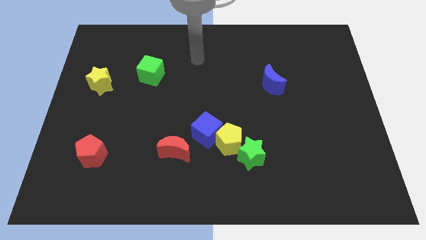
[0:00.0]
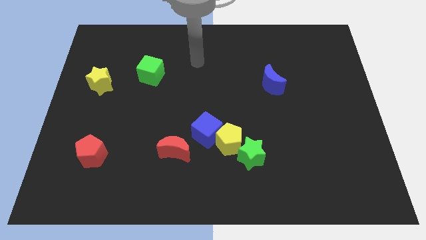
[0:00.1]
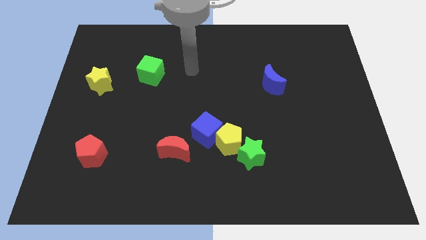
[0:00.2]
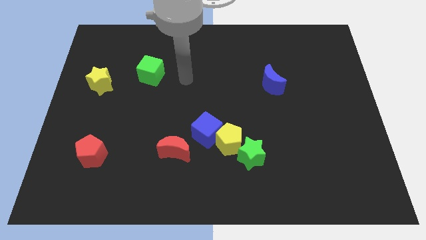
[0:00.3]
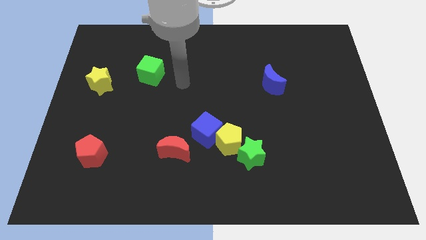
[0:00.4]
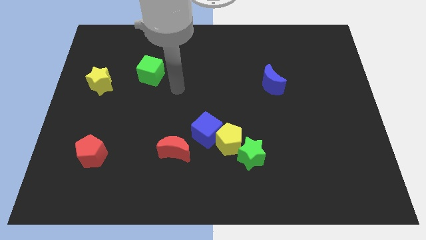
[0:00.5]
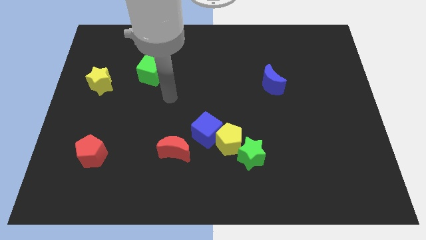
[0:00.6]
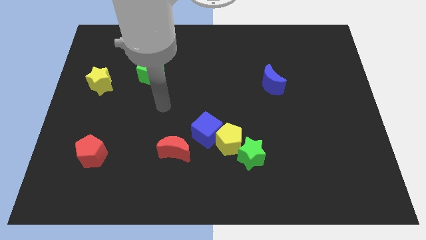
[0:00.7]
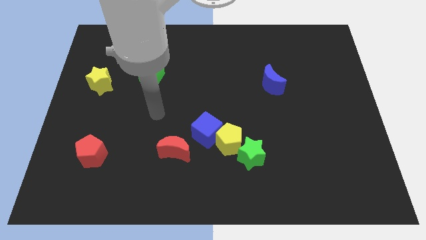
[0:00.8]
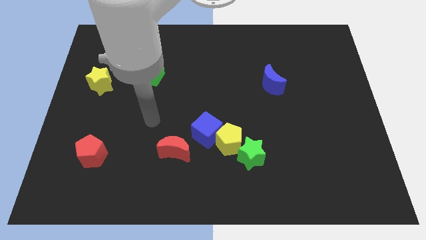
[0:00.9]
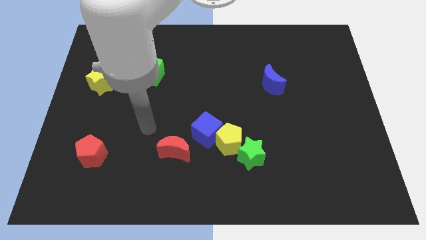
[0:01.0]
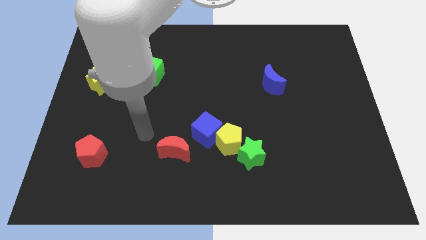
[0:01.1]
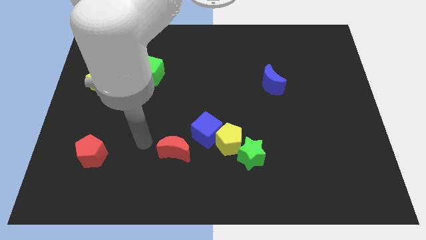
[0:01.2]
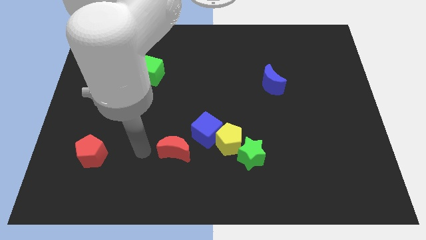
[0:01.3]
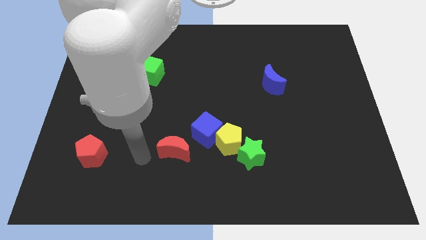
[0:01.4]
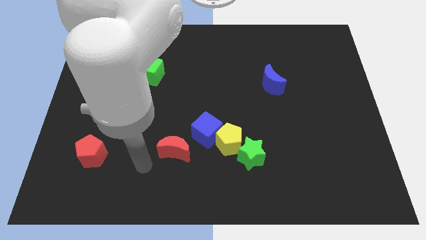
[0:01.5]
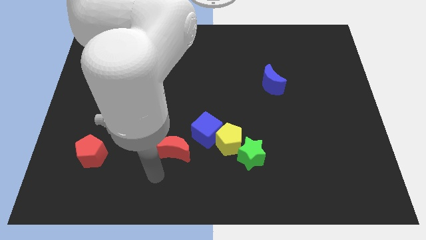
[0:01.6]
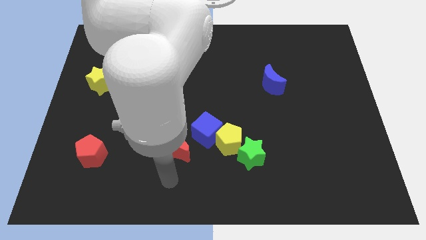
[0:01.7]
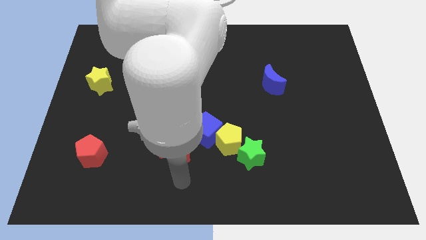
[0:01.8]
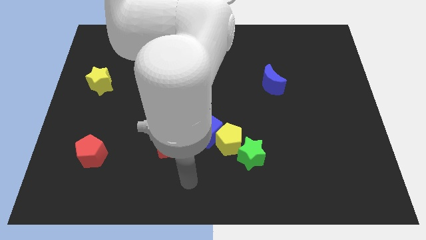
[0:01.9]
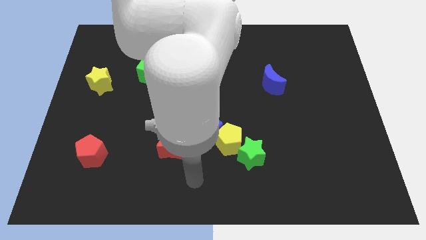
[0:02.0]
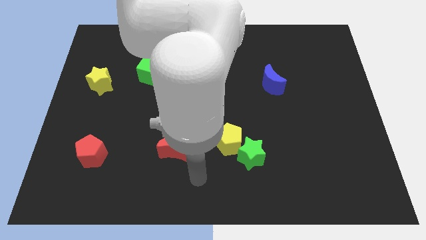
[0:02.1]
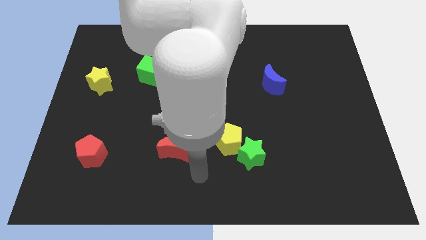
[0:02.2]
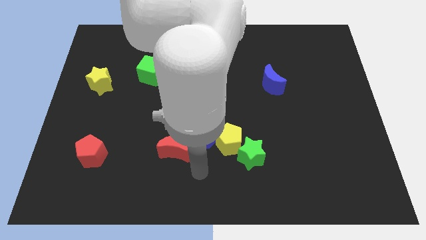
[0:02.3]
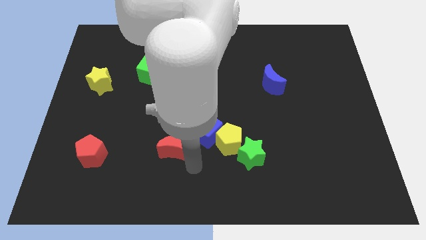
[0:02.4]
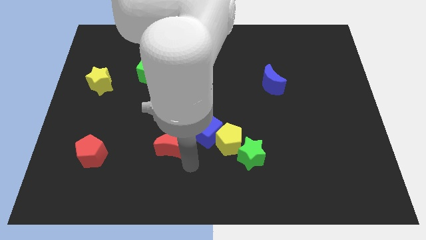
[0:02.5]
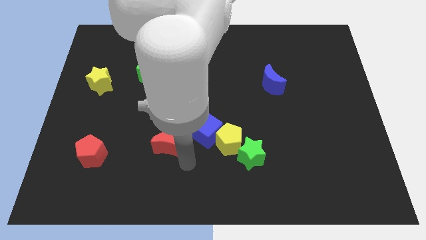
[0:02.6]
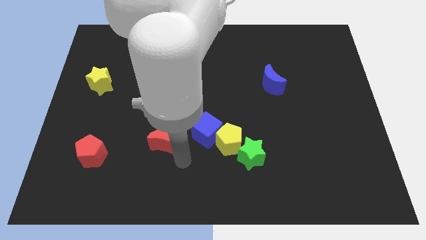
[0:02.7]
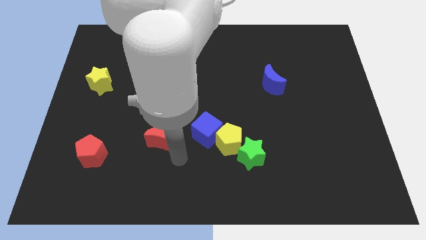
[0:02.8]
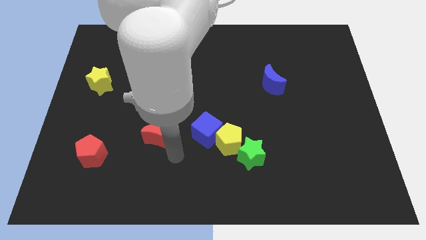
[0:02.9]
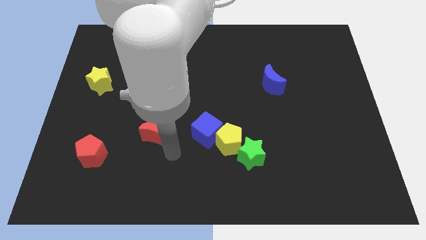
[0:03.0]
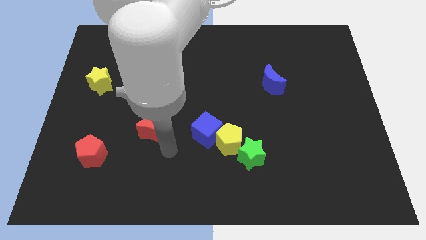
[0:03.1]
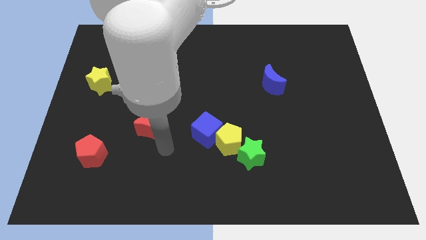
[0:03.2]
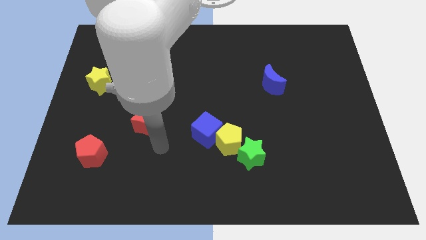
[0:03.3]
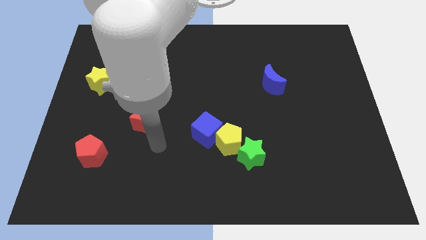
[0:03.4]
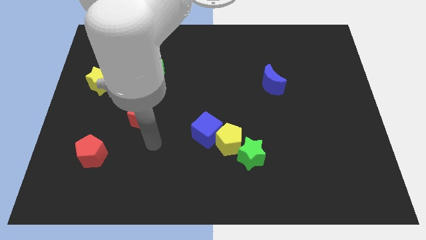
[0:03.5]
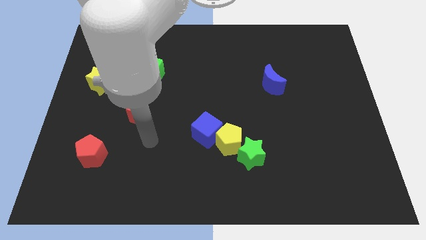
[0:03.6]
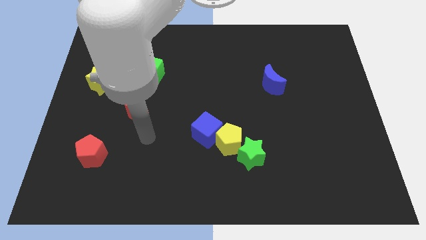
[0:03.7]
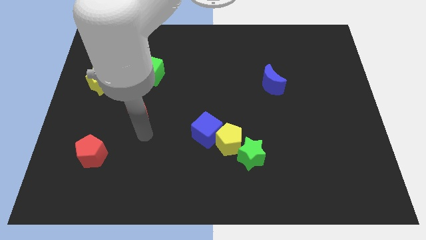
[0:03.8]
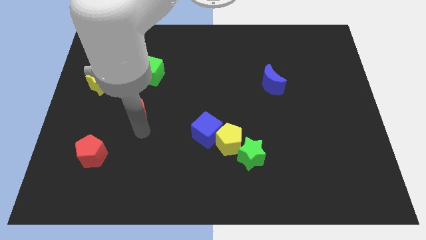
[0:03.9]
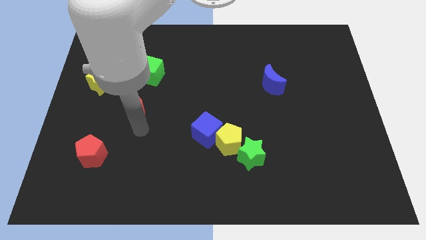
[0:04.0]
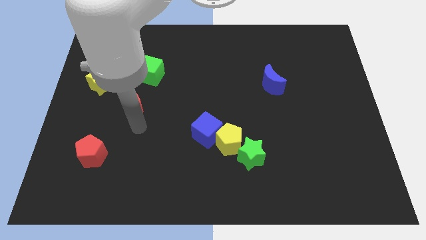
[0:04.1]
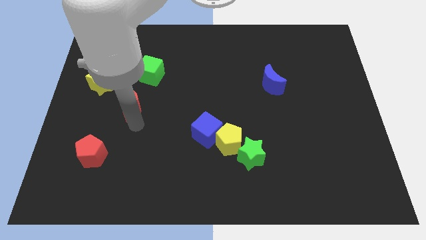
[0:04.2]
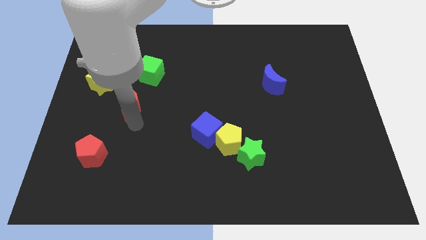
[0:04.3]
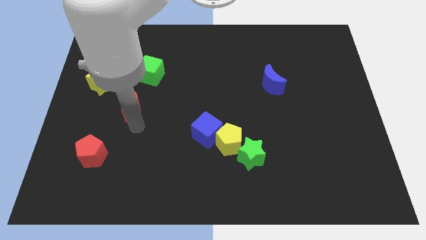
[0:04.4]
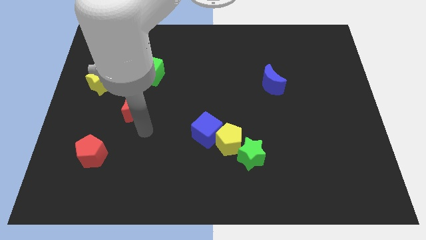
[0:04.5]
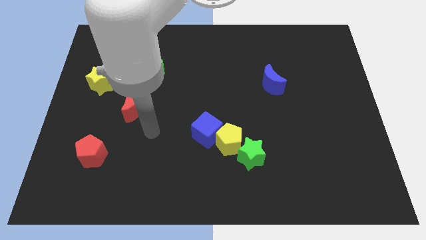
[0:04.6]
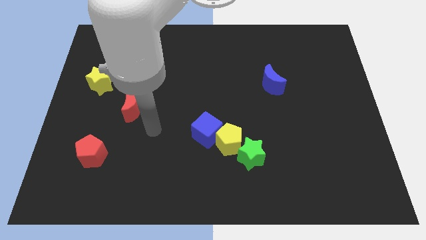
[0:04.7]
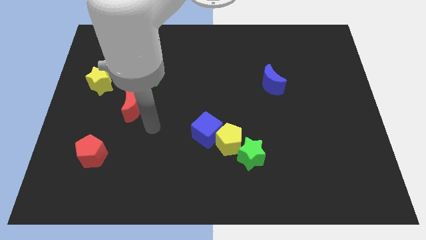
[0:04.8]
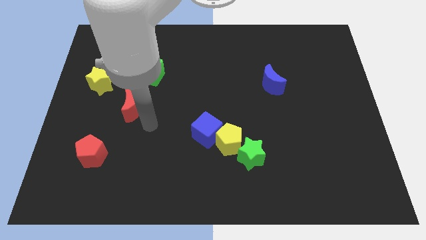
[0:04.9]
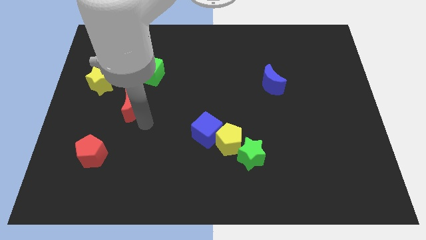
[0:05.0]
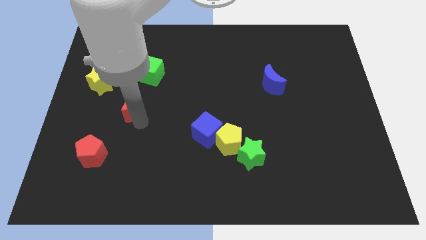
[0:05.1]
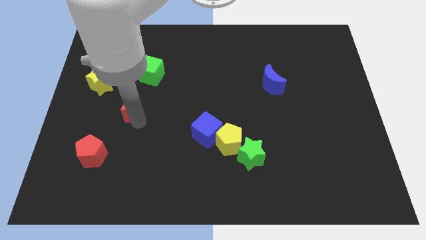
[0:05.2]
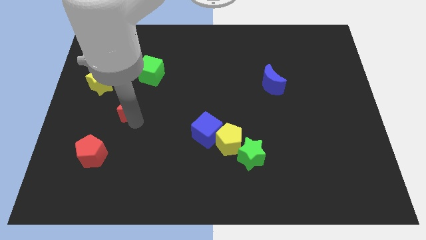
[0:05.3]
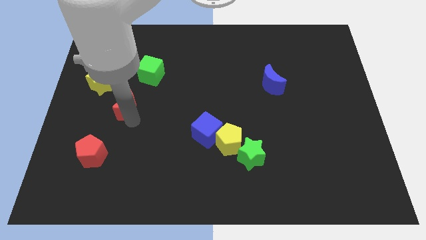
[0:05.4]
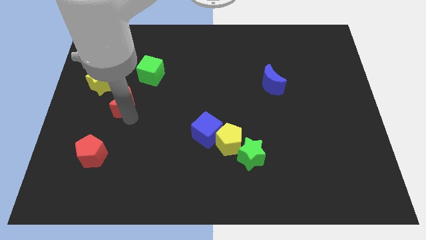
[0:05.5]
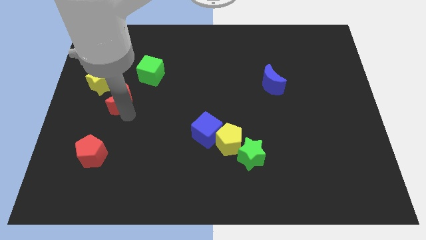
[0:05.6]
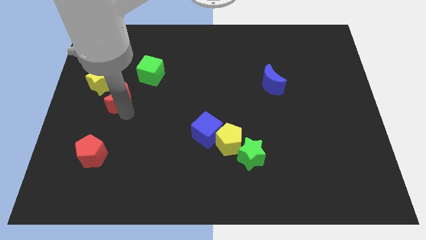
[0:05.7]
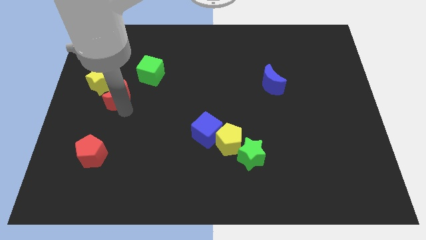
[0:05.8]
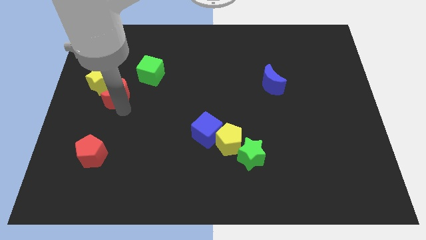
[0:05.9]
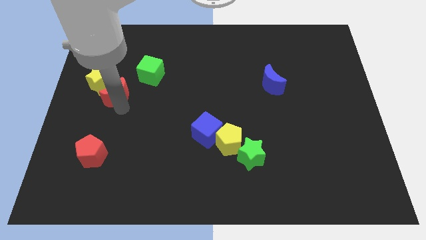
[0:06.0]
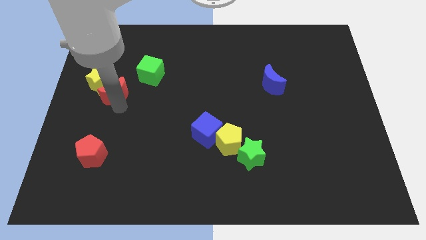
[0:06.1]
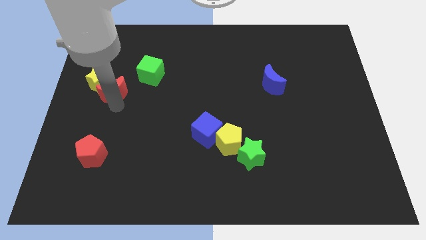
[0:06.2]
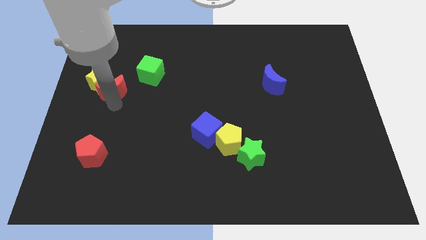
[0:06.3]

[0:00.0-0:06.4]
slide the red moon to the yellow star

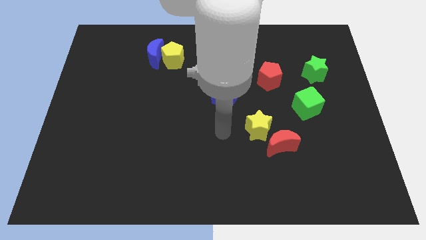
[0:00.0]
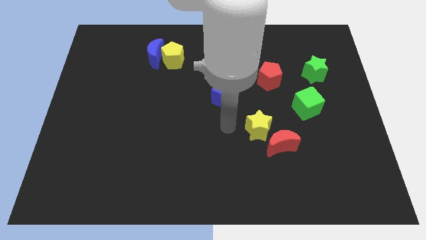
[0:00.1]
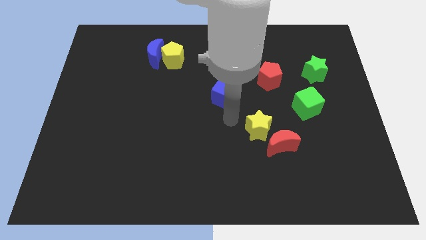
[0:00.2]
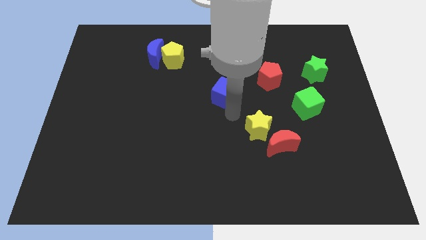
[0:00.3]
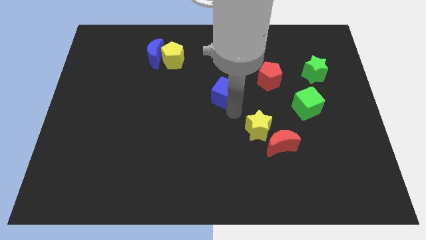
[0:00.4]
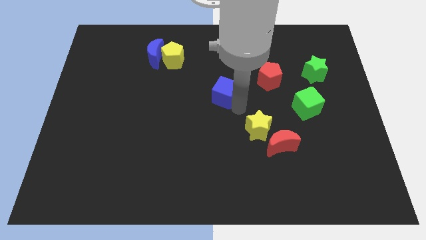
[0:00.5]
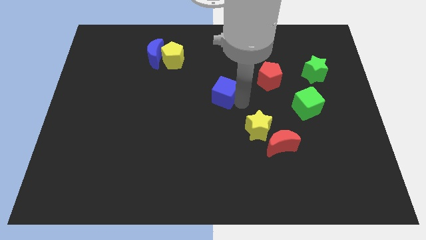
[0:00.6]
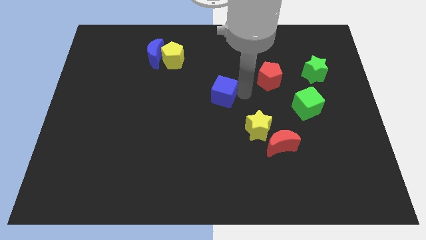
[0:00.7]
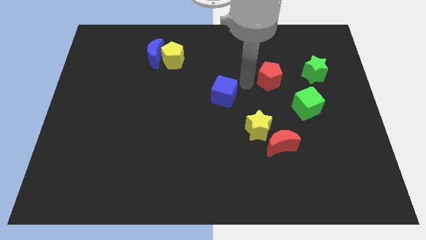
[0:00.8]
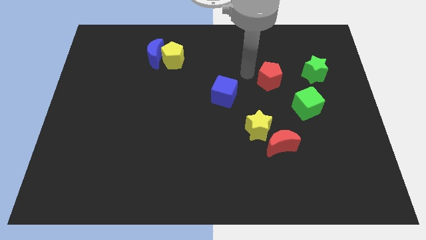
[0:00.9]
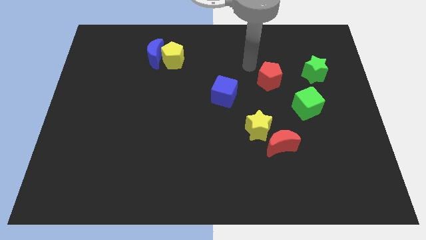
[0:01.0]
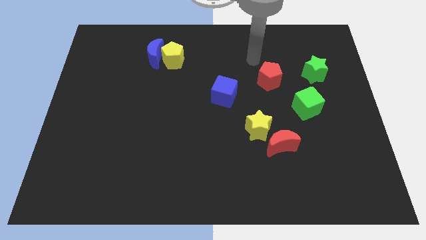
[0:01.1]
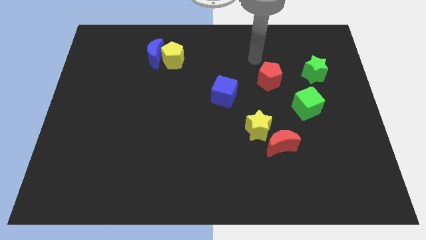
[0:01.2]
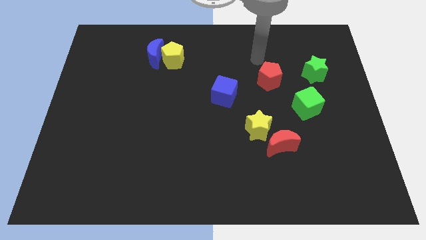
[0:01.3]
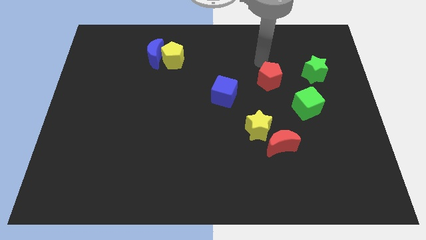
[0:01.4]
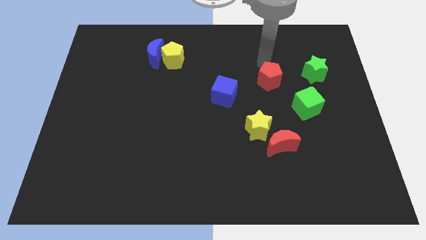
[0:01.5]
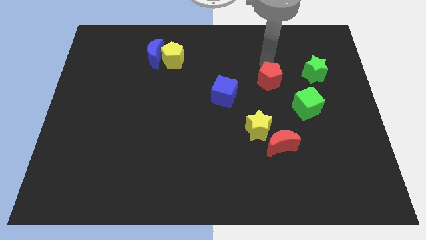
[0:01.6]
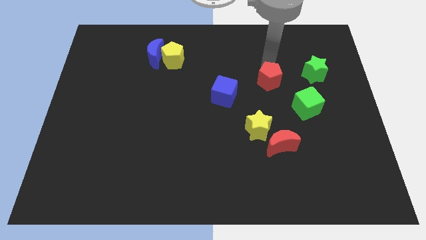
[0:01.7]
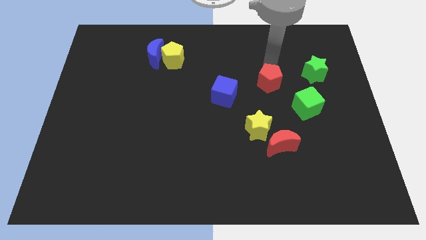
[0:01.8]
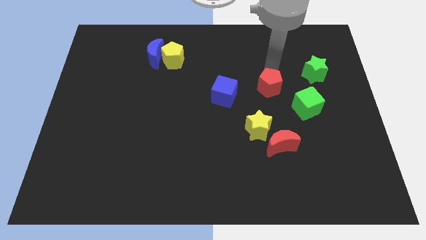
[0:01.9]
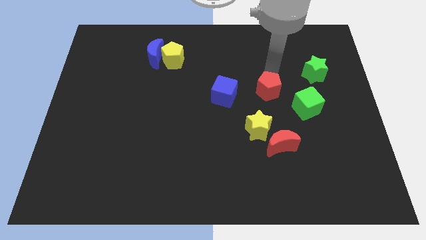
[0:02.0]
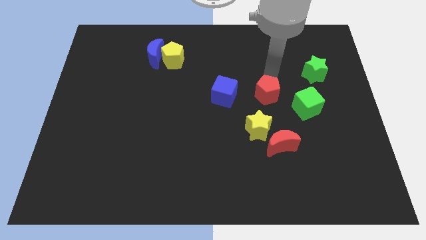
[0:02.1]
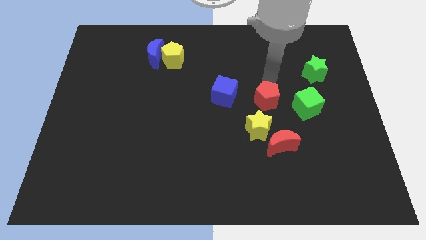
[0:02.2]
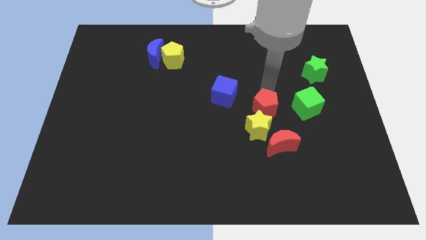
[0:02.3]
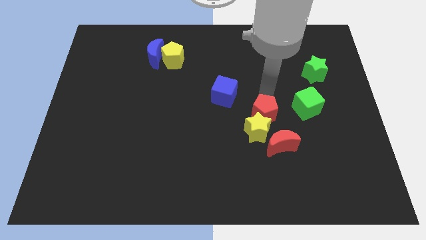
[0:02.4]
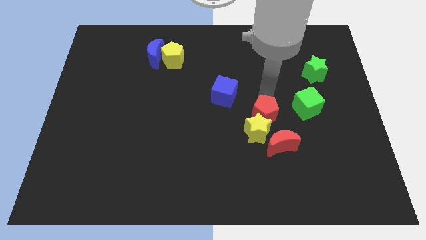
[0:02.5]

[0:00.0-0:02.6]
push the red pentagon next to the yellow star
